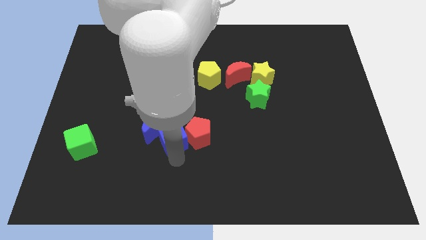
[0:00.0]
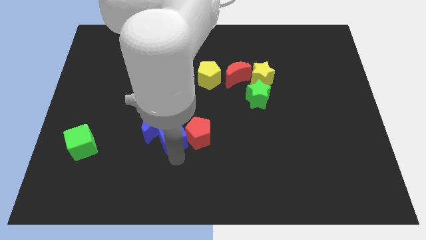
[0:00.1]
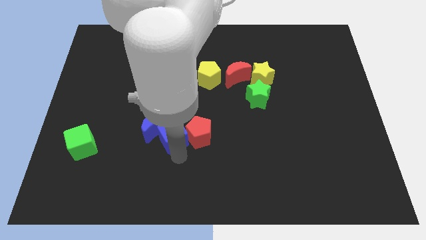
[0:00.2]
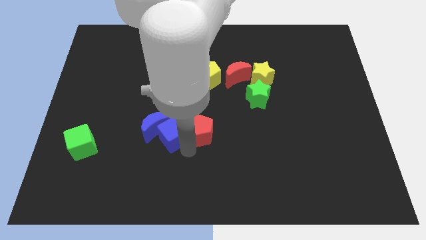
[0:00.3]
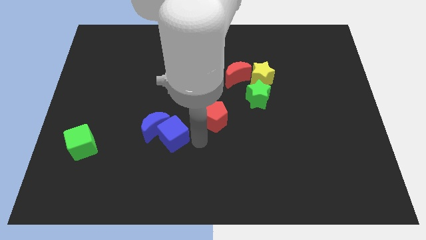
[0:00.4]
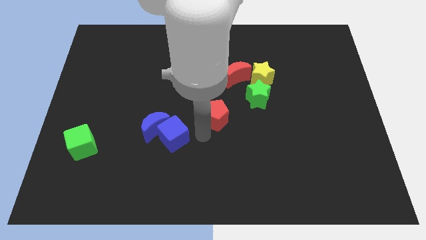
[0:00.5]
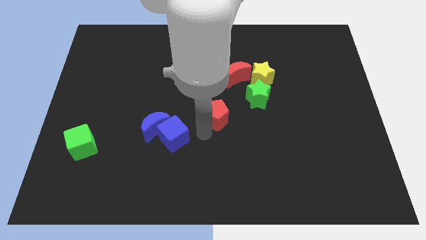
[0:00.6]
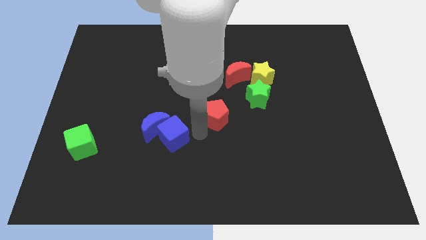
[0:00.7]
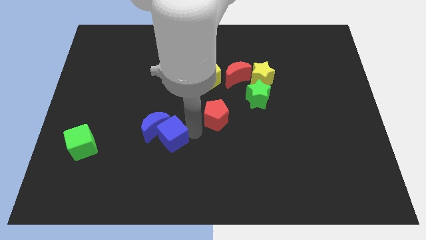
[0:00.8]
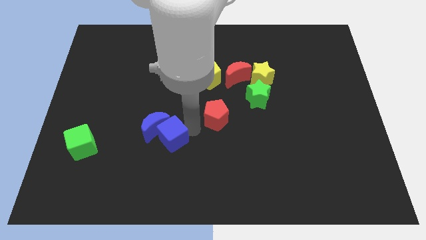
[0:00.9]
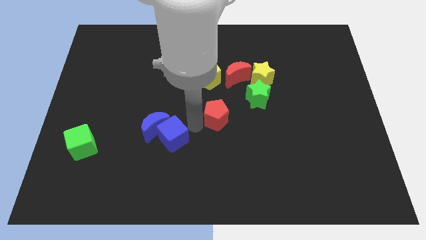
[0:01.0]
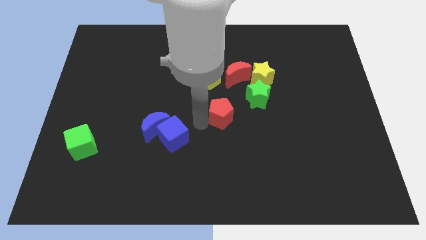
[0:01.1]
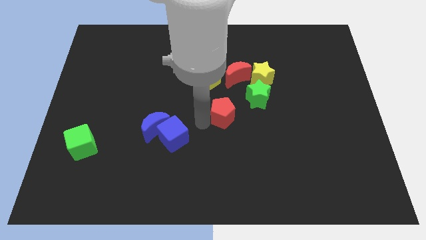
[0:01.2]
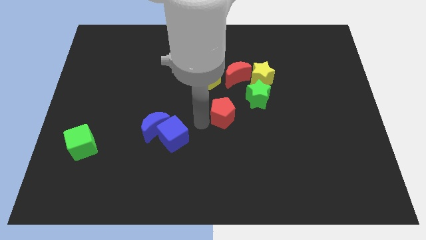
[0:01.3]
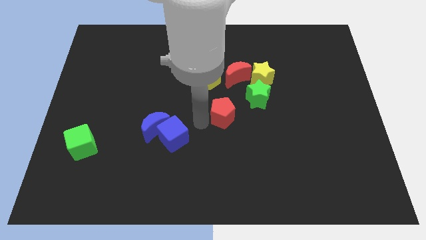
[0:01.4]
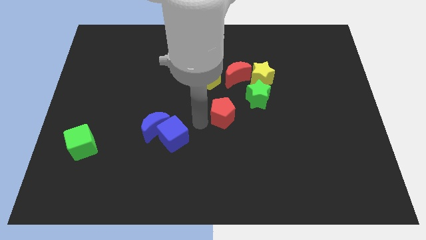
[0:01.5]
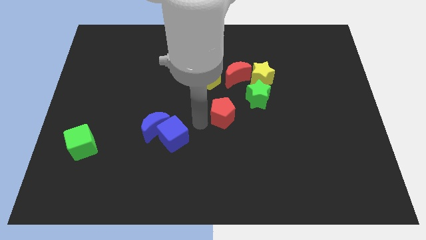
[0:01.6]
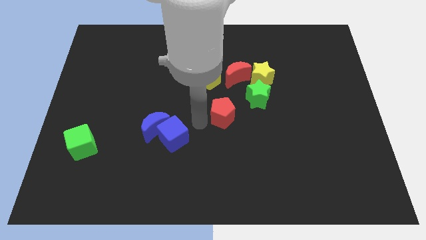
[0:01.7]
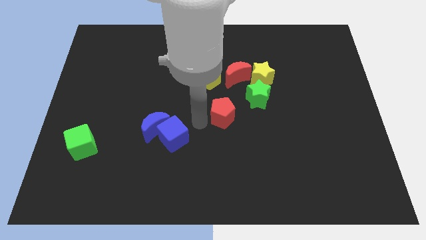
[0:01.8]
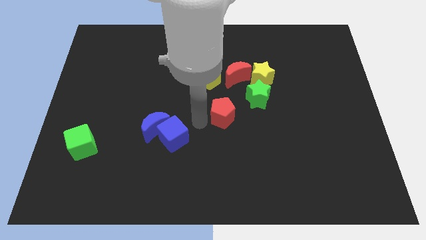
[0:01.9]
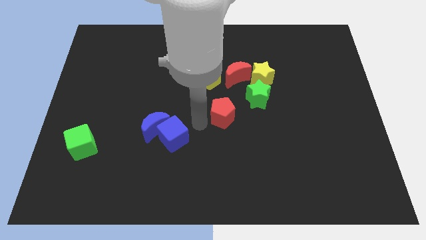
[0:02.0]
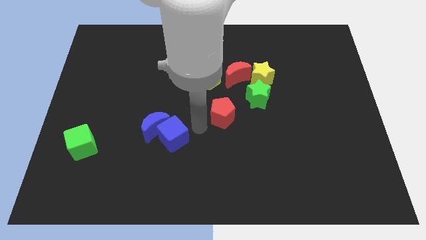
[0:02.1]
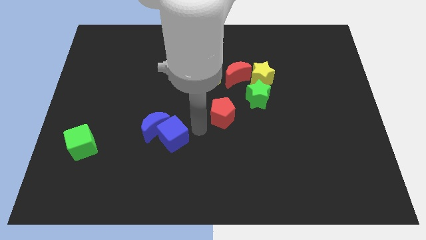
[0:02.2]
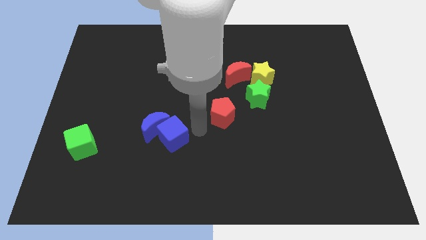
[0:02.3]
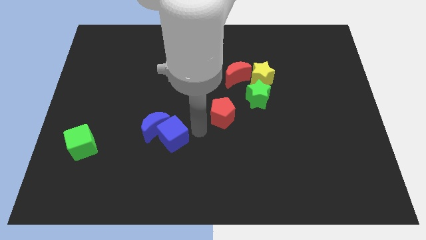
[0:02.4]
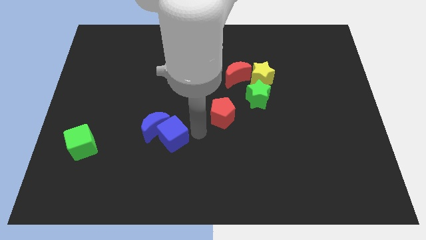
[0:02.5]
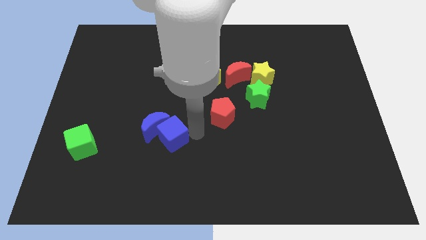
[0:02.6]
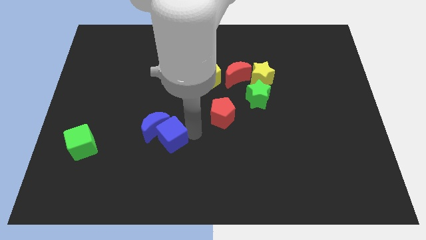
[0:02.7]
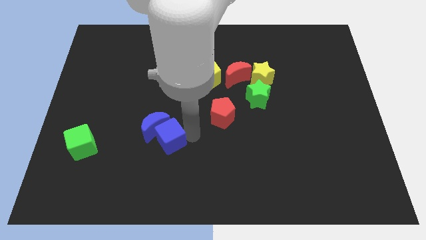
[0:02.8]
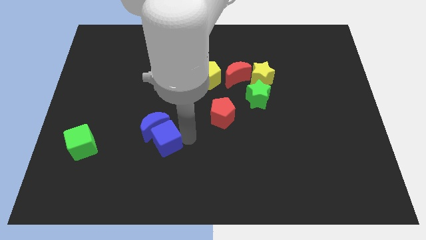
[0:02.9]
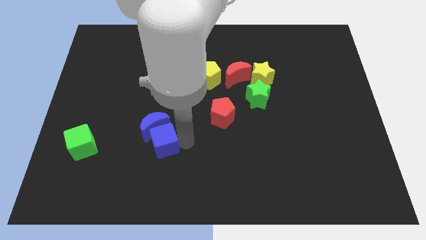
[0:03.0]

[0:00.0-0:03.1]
move the red pentagon to the center of the board

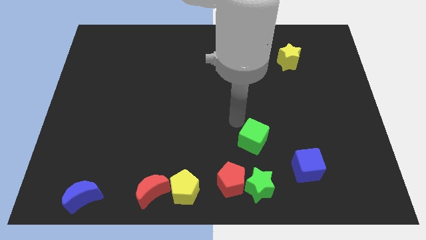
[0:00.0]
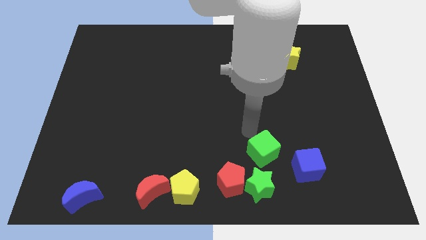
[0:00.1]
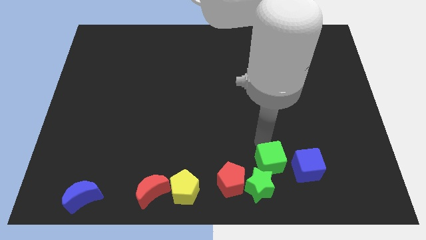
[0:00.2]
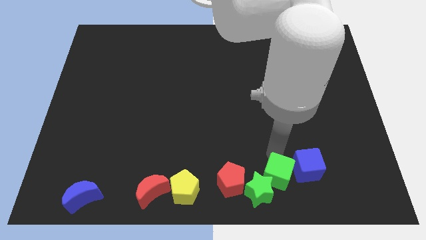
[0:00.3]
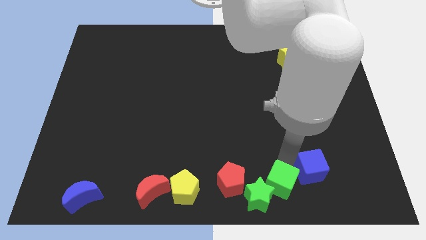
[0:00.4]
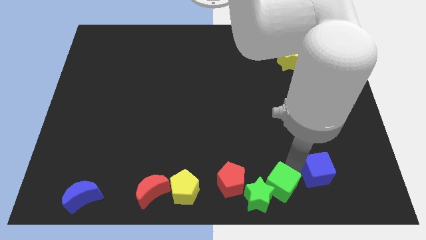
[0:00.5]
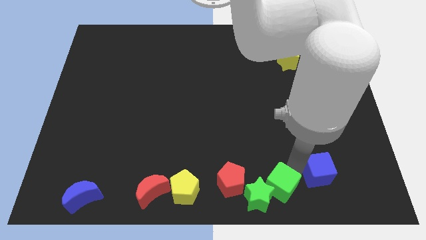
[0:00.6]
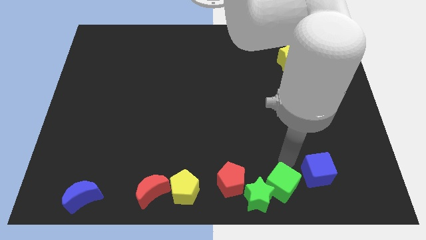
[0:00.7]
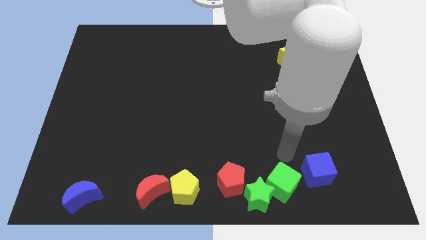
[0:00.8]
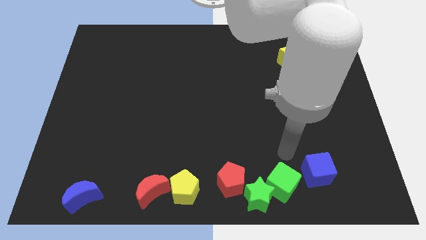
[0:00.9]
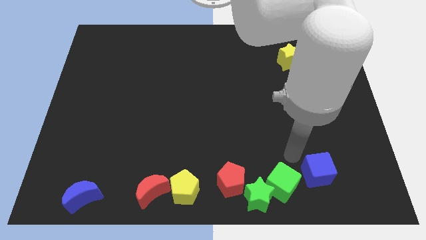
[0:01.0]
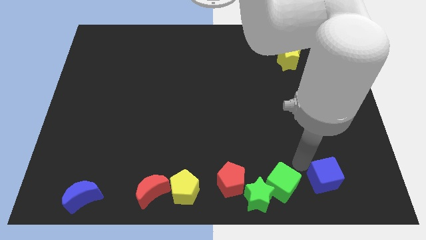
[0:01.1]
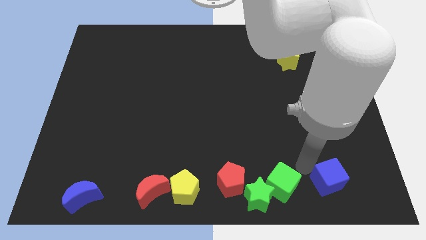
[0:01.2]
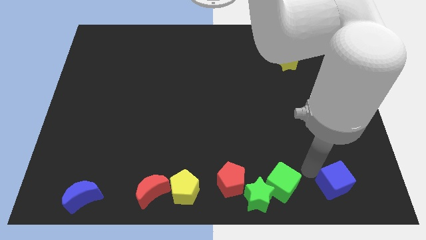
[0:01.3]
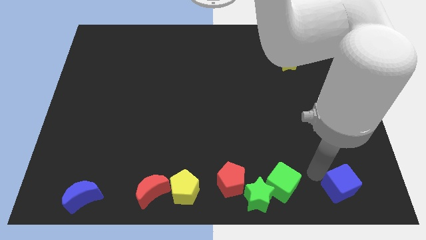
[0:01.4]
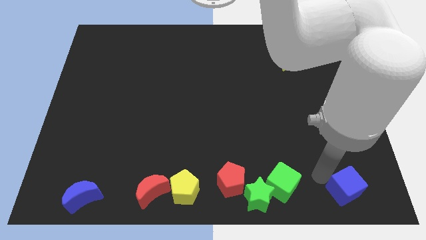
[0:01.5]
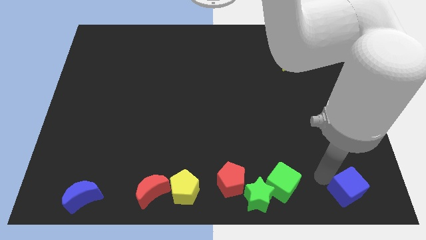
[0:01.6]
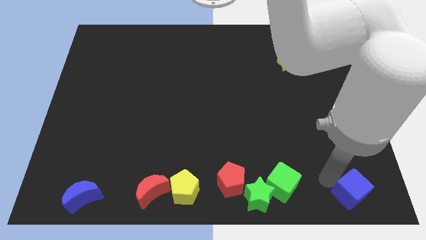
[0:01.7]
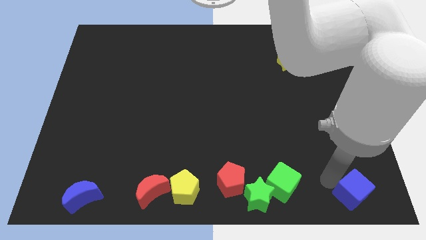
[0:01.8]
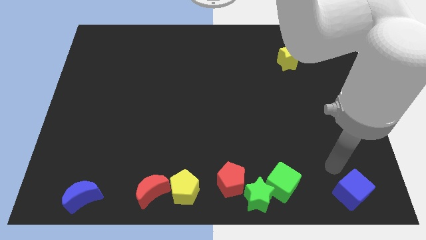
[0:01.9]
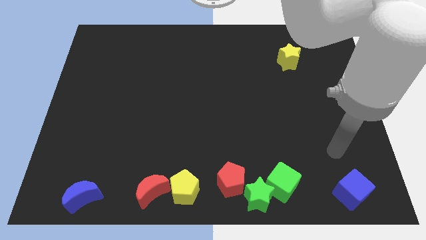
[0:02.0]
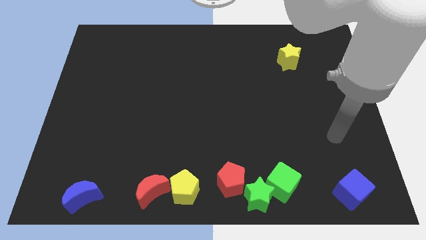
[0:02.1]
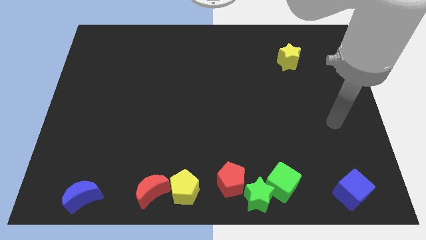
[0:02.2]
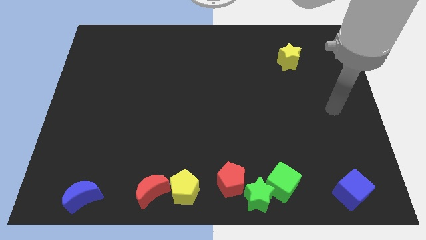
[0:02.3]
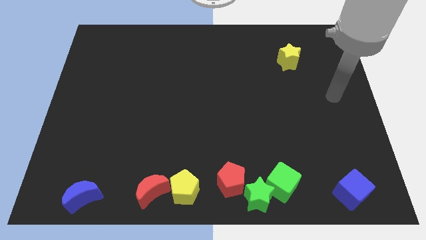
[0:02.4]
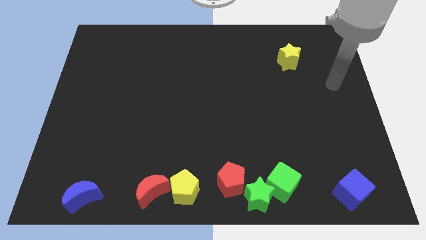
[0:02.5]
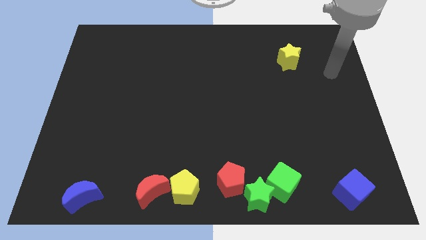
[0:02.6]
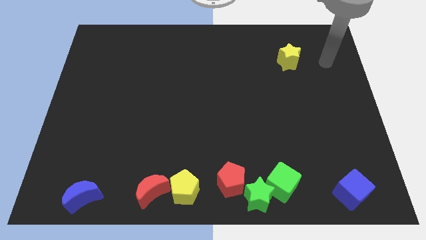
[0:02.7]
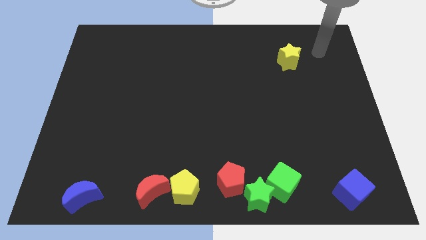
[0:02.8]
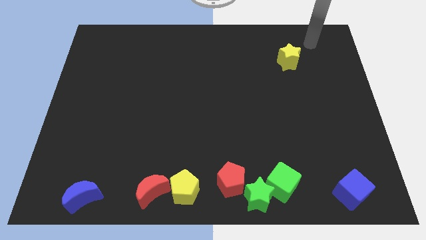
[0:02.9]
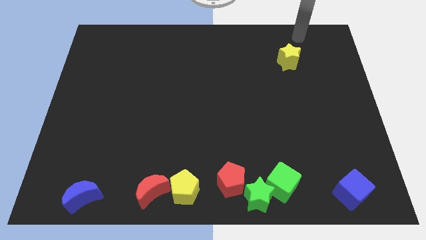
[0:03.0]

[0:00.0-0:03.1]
drag the green cube and place it close to the green star

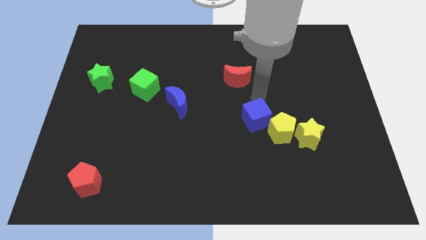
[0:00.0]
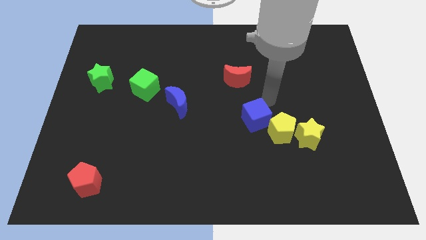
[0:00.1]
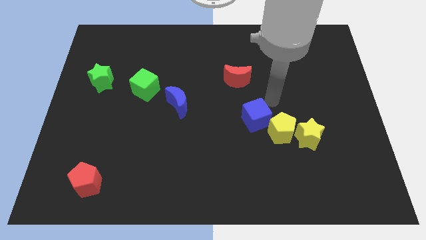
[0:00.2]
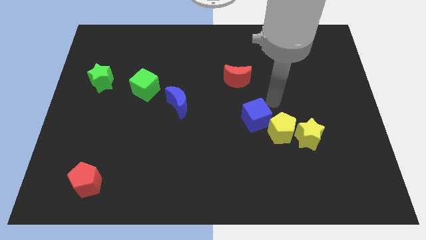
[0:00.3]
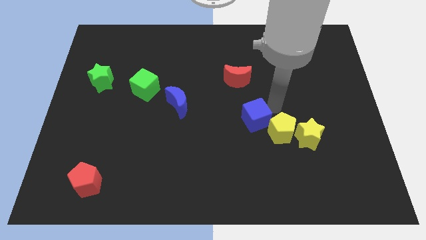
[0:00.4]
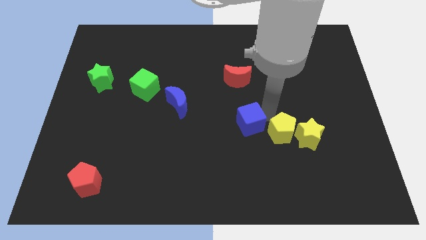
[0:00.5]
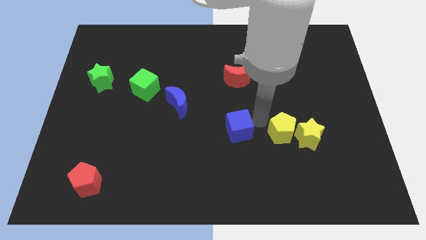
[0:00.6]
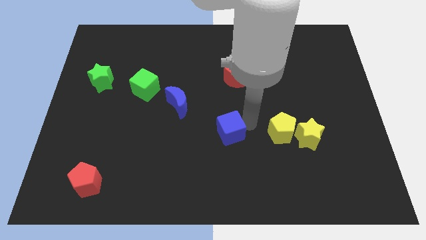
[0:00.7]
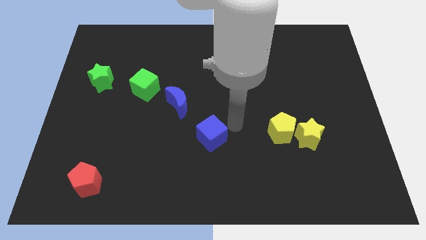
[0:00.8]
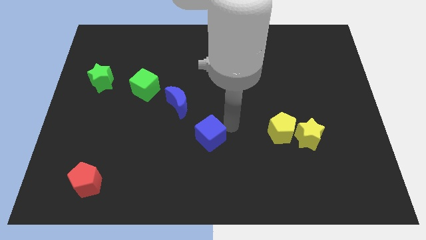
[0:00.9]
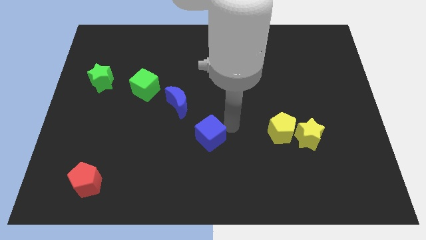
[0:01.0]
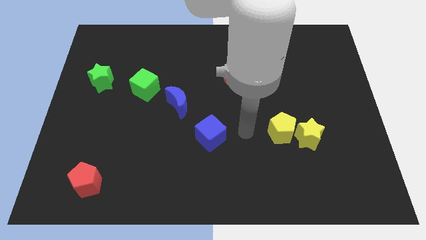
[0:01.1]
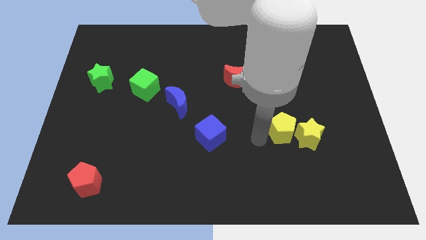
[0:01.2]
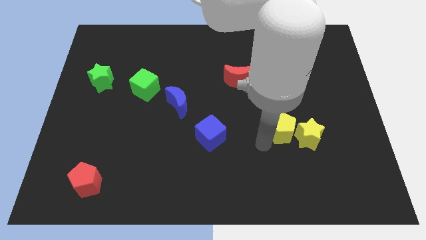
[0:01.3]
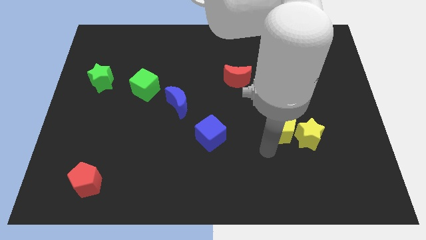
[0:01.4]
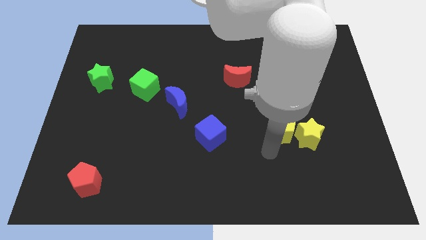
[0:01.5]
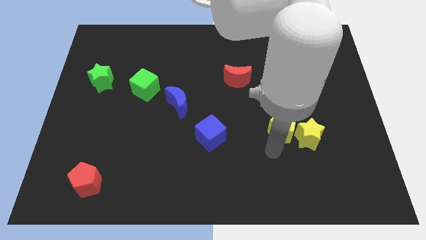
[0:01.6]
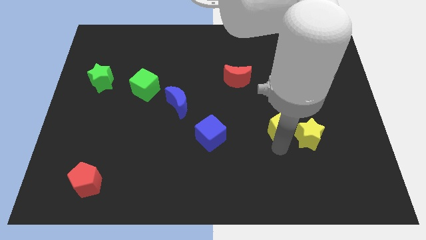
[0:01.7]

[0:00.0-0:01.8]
place the blue cube diagonally to the right of blue moon

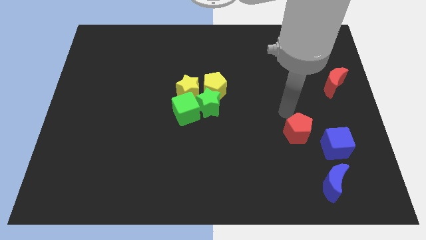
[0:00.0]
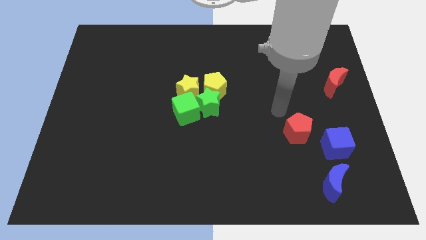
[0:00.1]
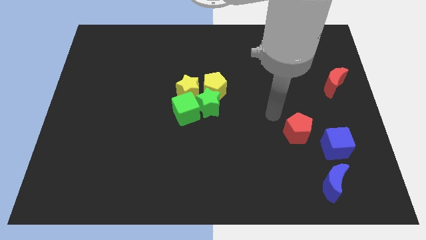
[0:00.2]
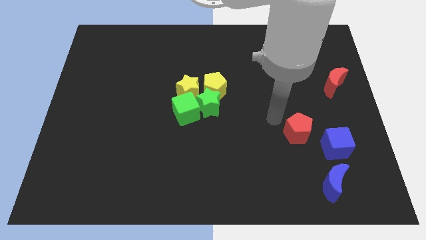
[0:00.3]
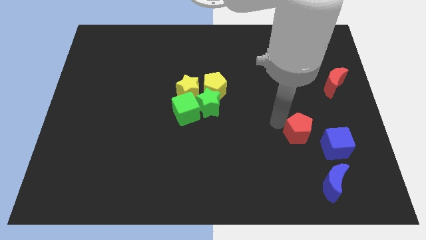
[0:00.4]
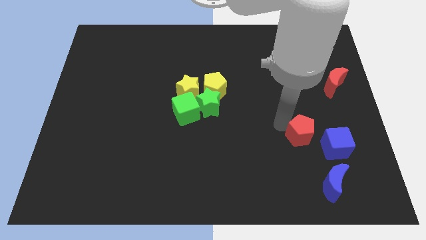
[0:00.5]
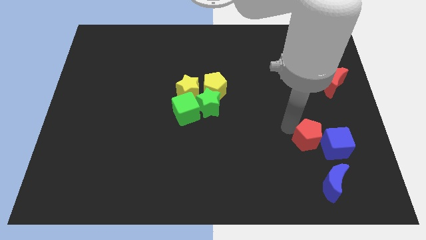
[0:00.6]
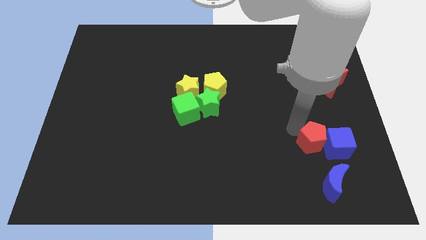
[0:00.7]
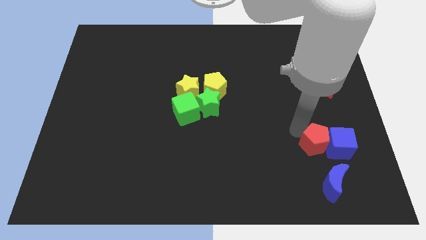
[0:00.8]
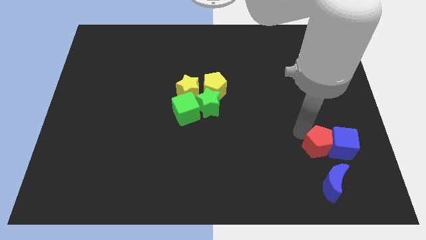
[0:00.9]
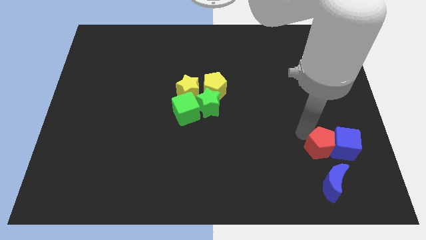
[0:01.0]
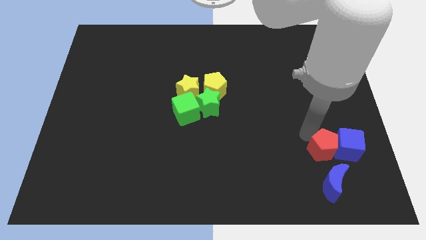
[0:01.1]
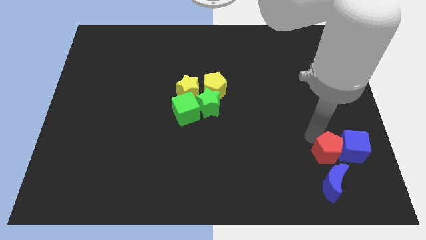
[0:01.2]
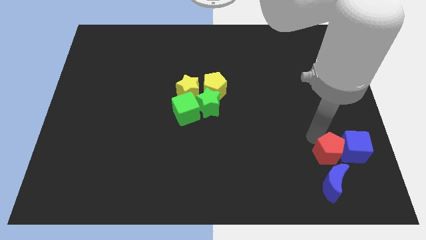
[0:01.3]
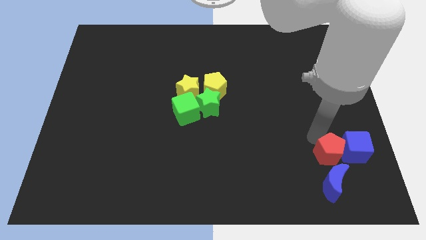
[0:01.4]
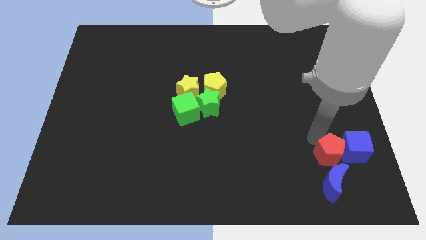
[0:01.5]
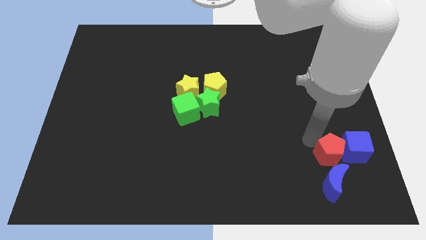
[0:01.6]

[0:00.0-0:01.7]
push the red pentagon into the blue cube
